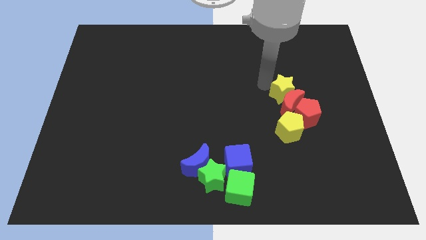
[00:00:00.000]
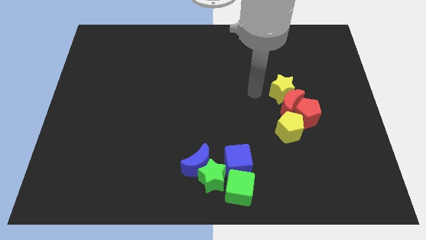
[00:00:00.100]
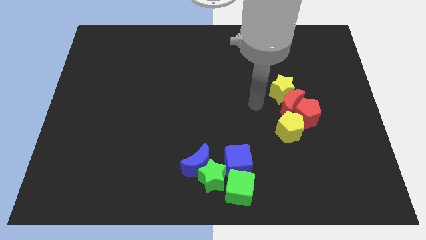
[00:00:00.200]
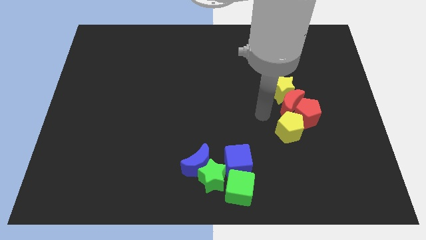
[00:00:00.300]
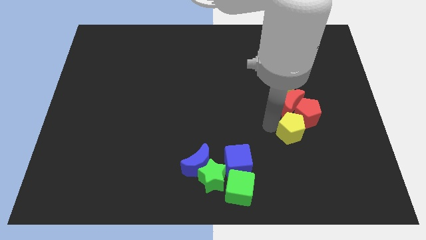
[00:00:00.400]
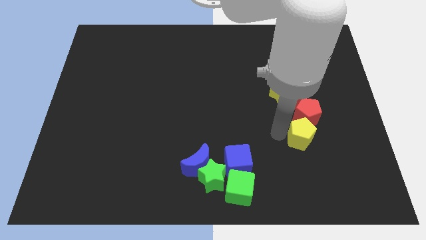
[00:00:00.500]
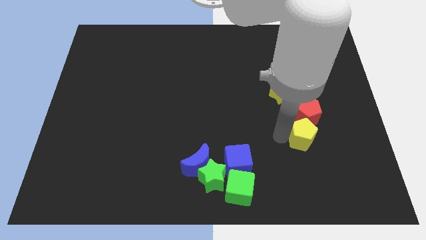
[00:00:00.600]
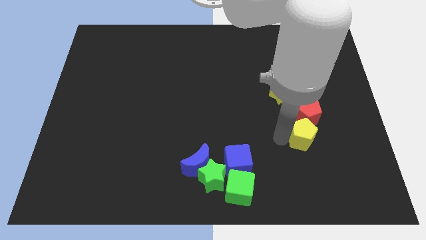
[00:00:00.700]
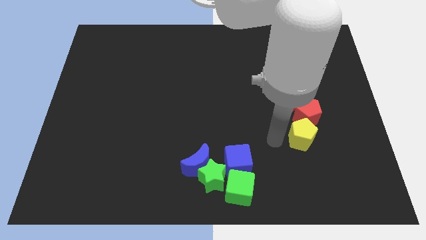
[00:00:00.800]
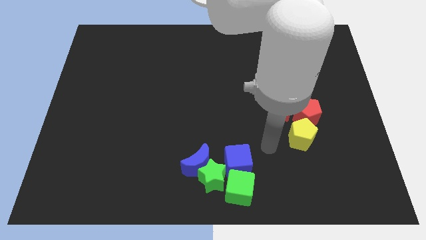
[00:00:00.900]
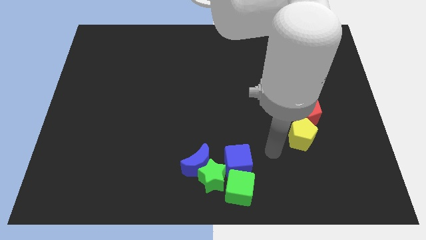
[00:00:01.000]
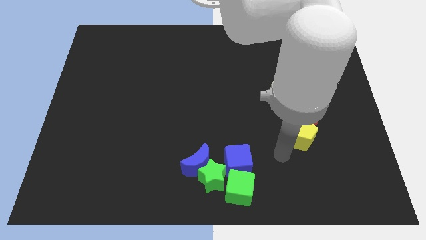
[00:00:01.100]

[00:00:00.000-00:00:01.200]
move the yellow pentagon to the bottom of the red pentagon

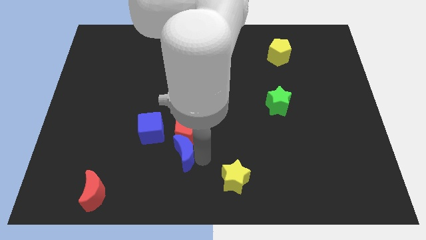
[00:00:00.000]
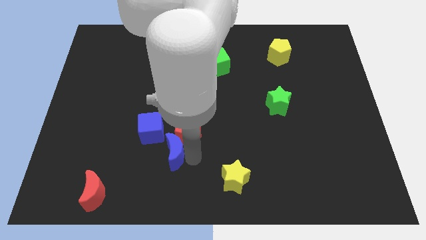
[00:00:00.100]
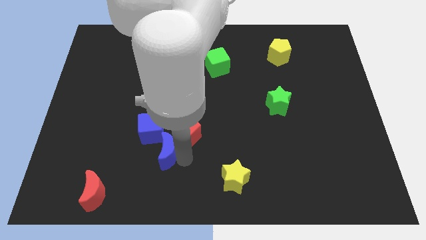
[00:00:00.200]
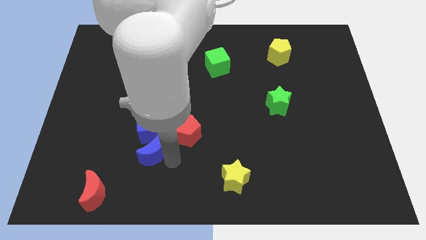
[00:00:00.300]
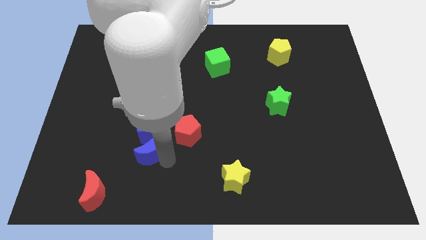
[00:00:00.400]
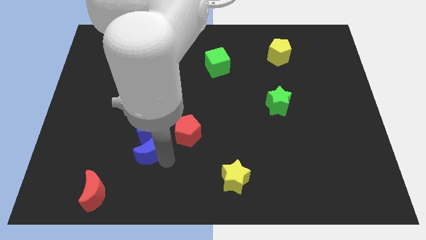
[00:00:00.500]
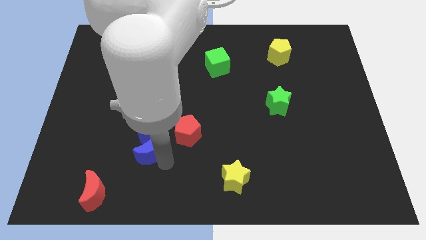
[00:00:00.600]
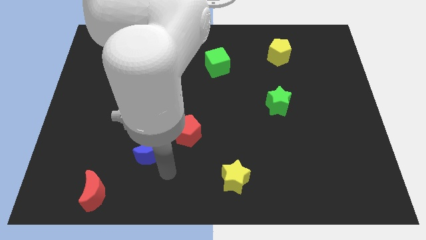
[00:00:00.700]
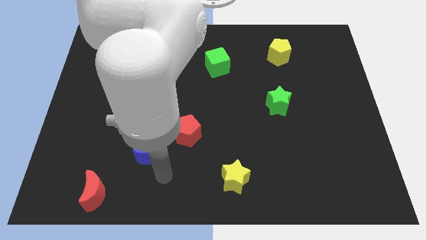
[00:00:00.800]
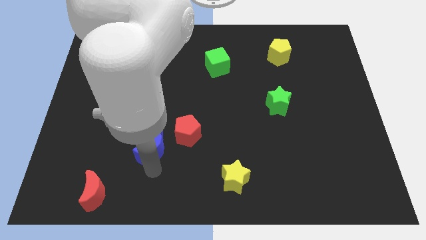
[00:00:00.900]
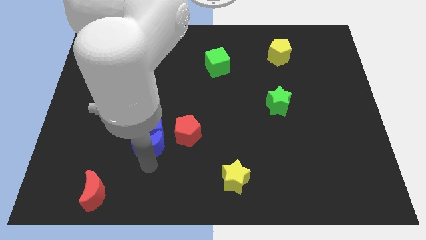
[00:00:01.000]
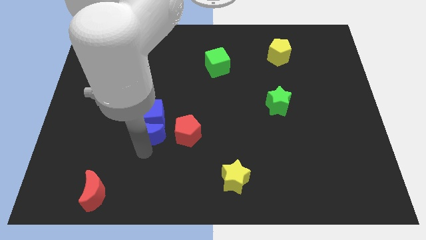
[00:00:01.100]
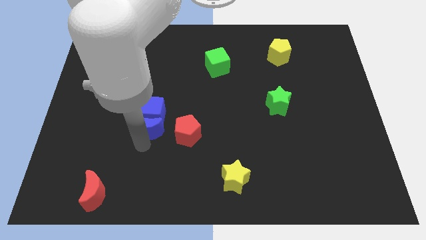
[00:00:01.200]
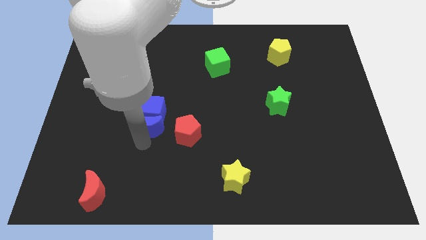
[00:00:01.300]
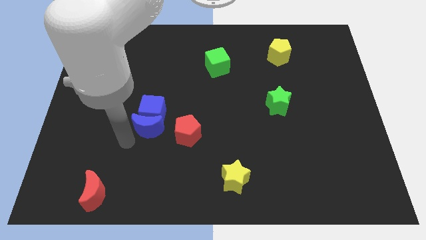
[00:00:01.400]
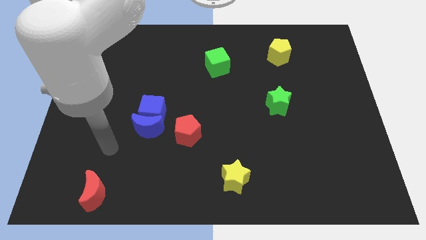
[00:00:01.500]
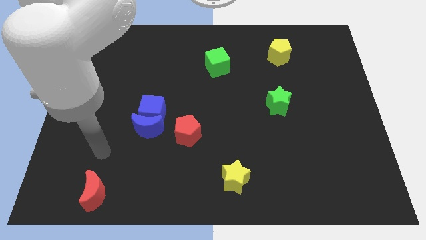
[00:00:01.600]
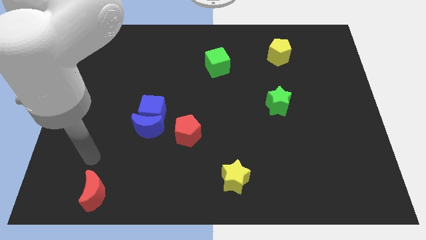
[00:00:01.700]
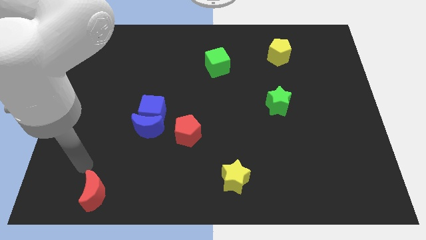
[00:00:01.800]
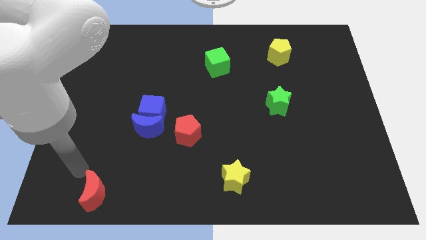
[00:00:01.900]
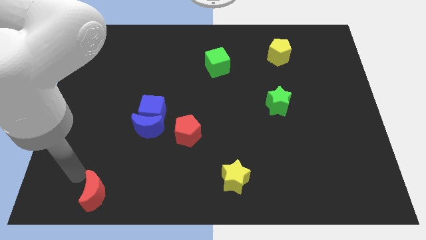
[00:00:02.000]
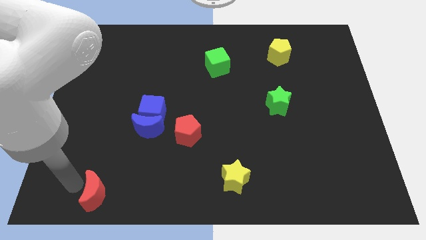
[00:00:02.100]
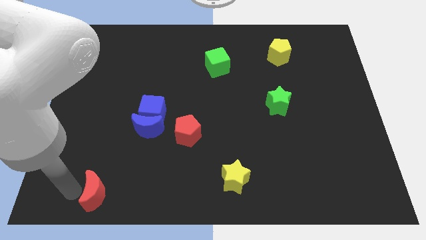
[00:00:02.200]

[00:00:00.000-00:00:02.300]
push the blue blocks together at the left side of the red pentagon

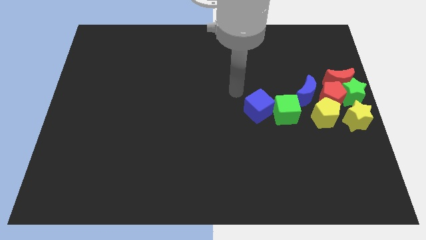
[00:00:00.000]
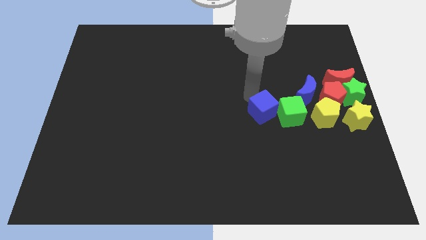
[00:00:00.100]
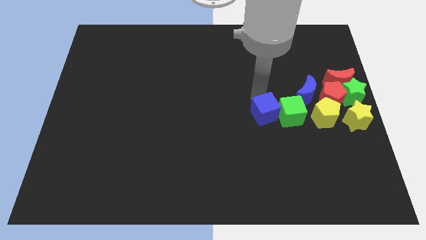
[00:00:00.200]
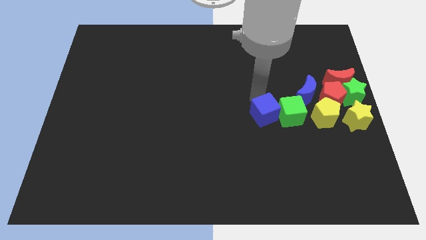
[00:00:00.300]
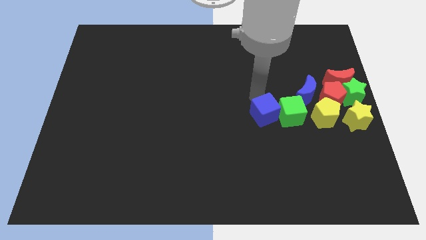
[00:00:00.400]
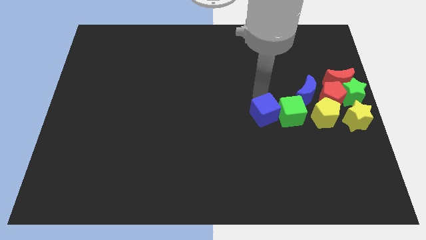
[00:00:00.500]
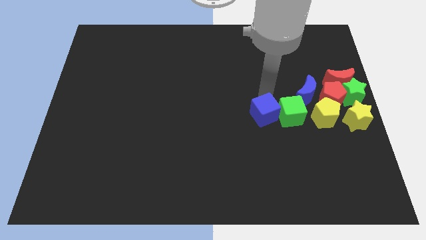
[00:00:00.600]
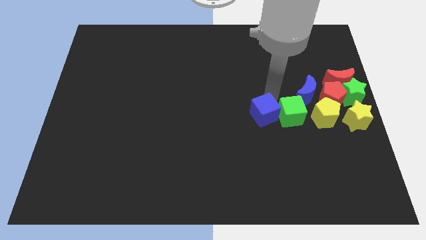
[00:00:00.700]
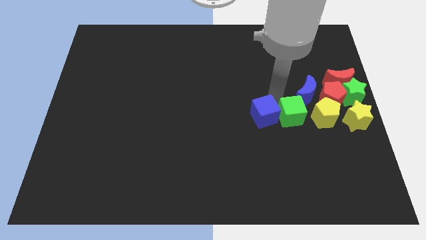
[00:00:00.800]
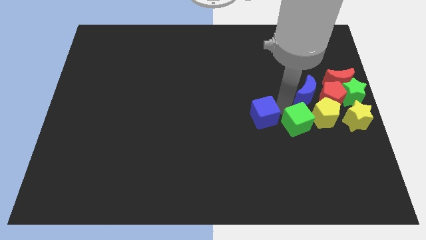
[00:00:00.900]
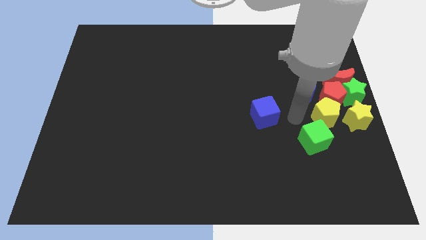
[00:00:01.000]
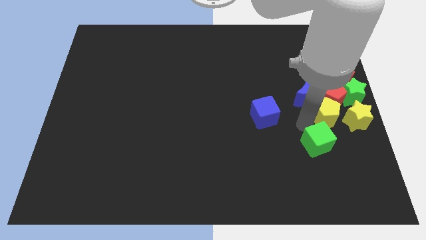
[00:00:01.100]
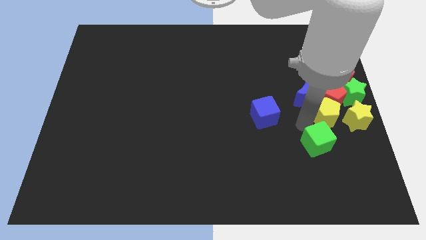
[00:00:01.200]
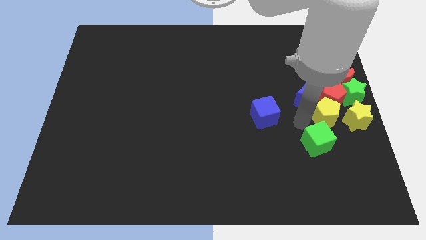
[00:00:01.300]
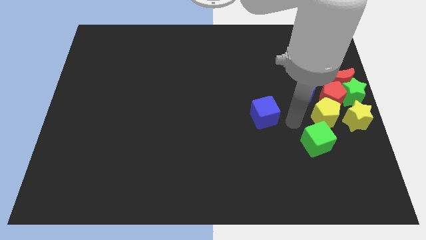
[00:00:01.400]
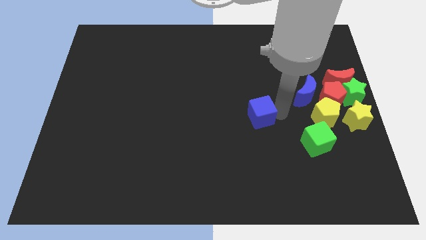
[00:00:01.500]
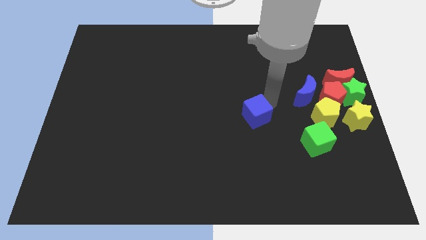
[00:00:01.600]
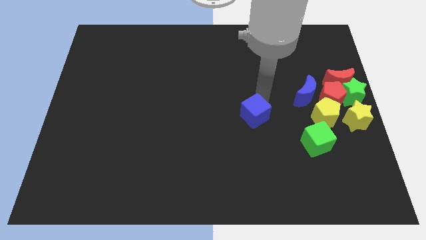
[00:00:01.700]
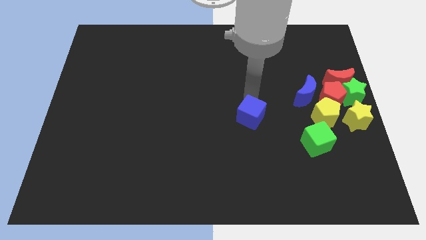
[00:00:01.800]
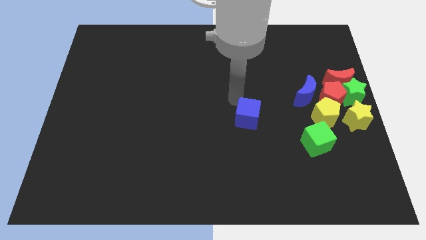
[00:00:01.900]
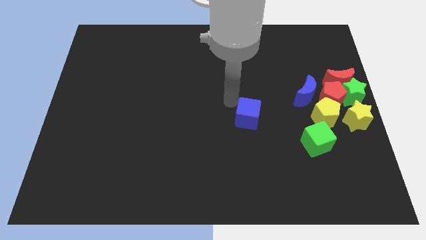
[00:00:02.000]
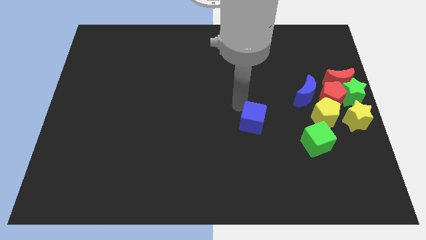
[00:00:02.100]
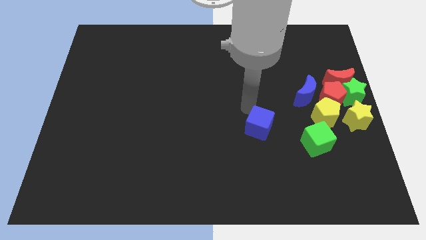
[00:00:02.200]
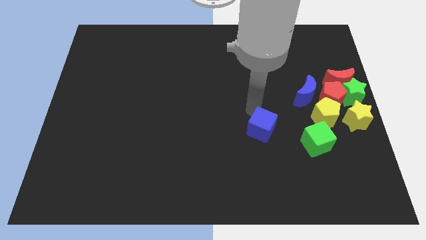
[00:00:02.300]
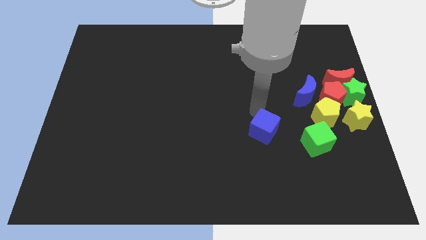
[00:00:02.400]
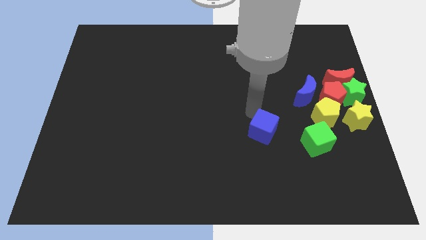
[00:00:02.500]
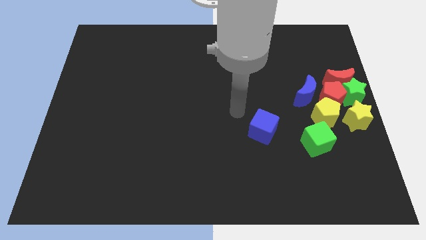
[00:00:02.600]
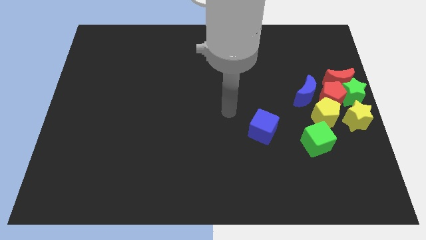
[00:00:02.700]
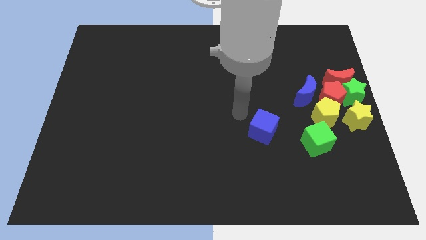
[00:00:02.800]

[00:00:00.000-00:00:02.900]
separate the blue cube and the green cube

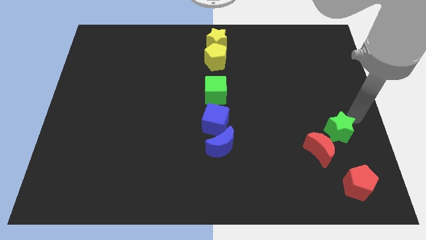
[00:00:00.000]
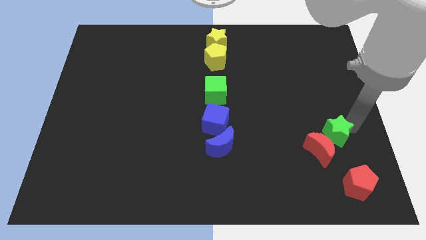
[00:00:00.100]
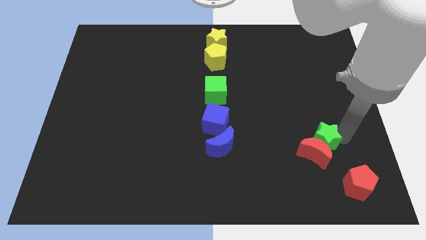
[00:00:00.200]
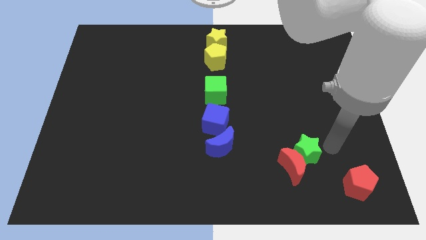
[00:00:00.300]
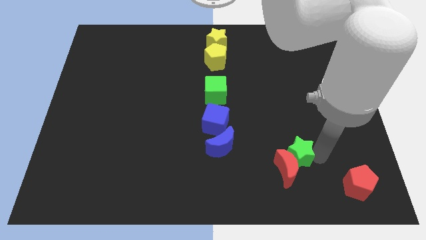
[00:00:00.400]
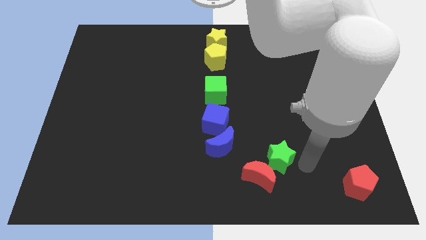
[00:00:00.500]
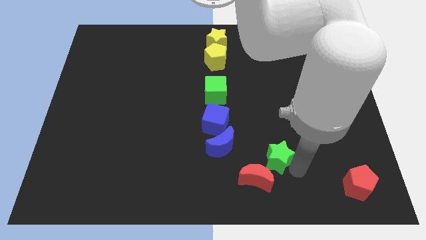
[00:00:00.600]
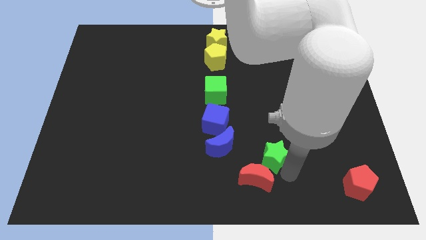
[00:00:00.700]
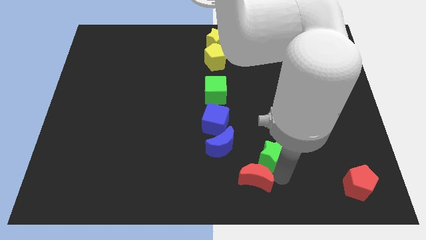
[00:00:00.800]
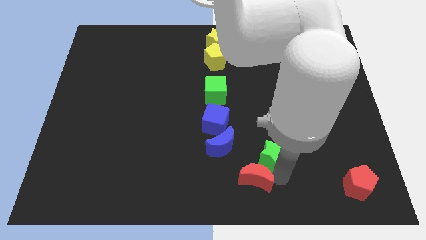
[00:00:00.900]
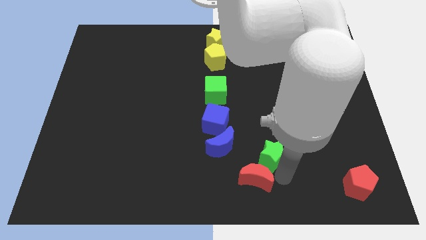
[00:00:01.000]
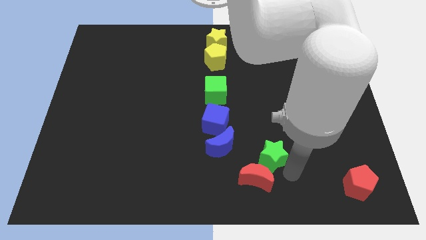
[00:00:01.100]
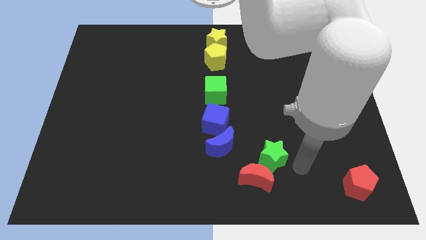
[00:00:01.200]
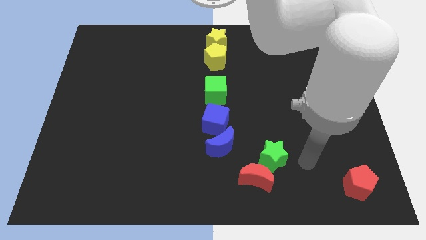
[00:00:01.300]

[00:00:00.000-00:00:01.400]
push the green star into the red moon

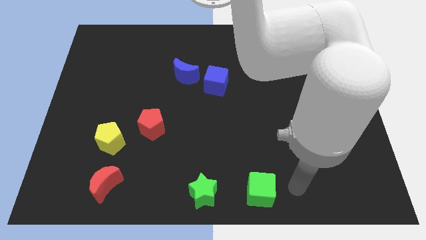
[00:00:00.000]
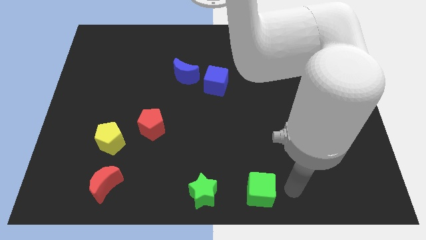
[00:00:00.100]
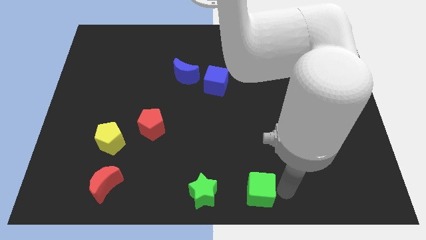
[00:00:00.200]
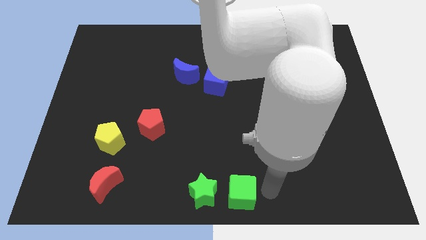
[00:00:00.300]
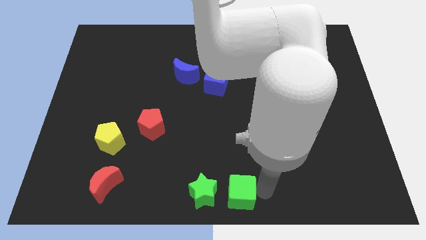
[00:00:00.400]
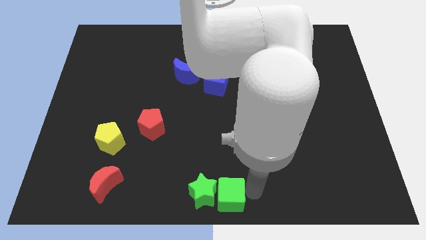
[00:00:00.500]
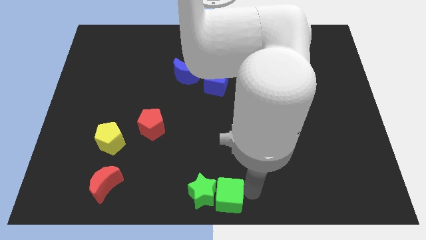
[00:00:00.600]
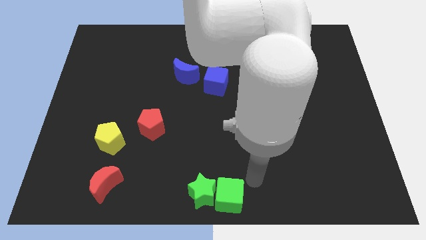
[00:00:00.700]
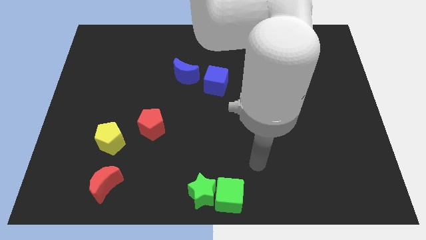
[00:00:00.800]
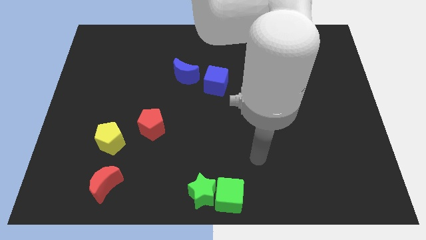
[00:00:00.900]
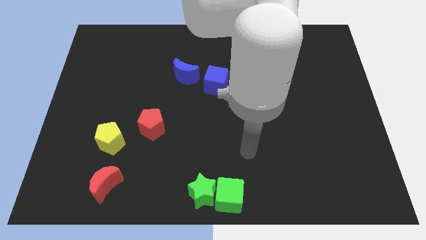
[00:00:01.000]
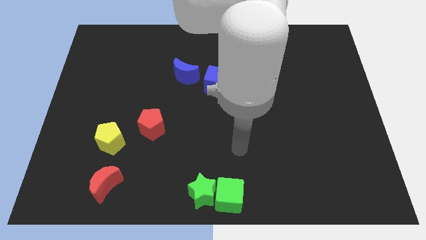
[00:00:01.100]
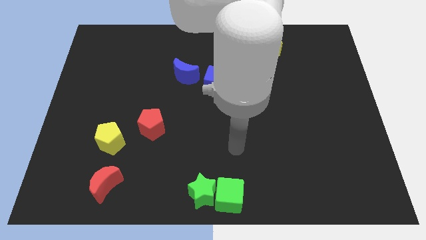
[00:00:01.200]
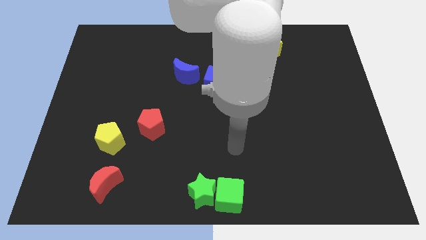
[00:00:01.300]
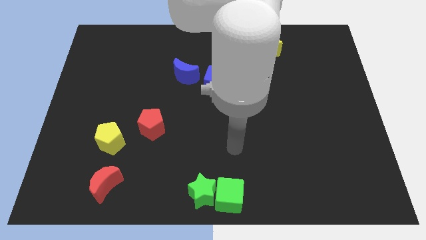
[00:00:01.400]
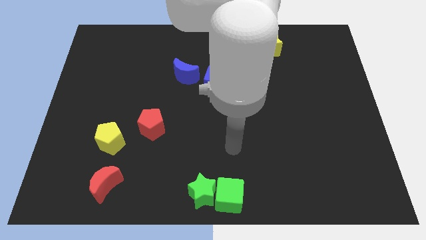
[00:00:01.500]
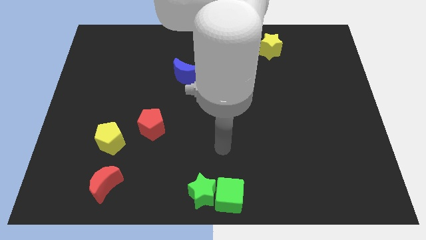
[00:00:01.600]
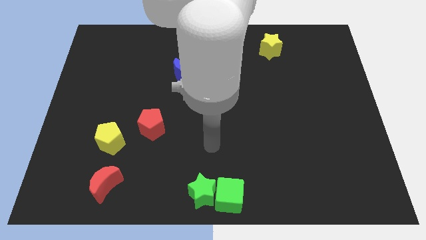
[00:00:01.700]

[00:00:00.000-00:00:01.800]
join the green blocks at bottom center of the board
